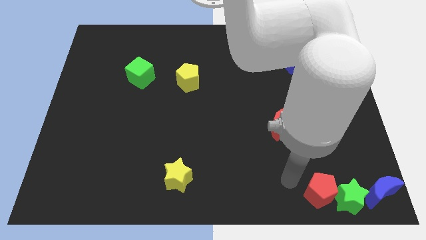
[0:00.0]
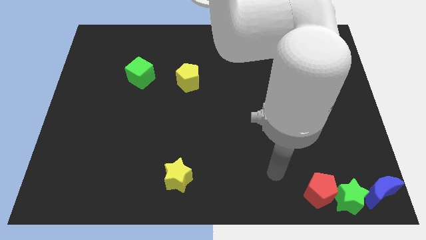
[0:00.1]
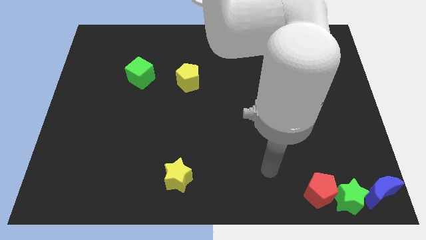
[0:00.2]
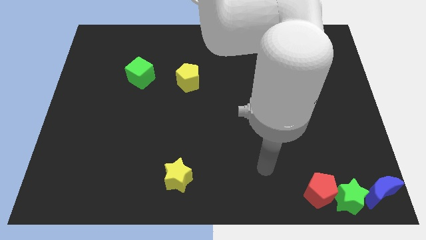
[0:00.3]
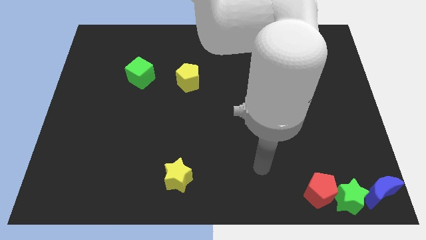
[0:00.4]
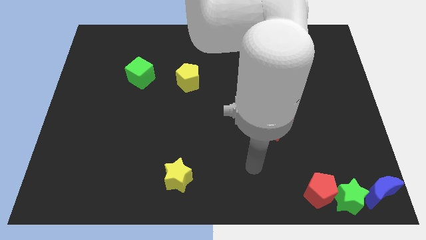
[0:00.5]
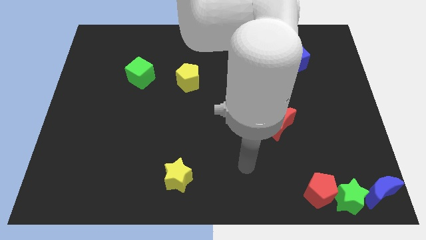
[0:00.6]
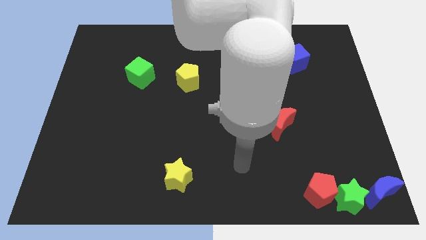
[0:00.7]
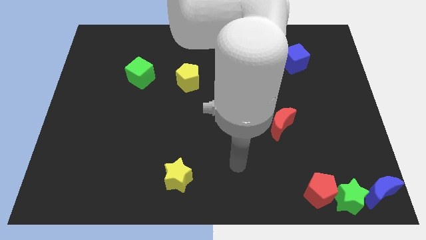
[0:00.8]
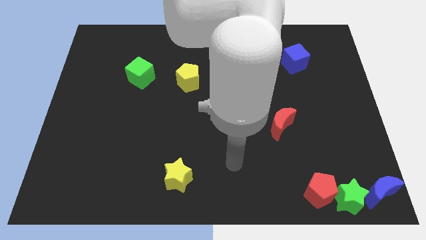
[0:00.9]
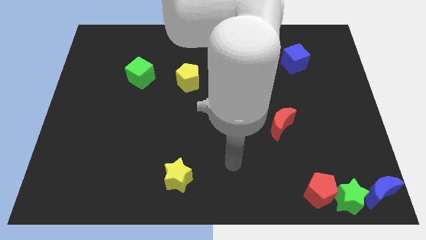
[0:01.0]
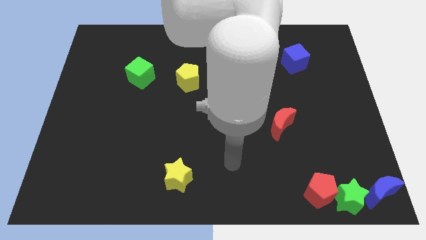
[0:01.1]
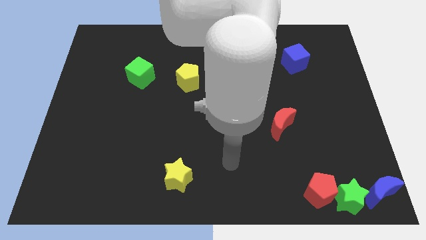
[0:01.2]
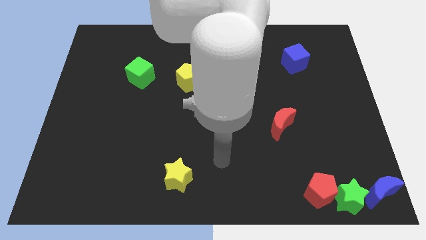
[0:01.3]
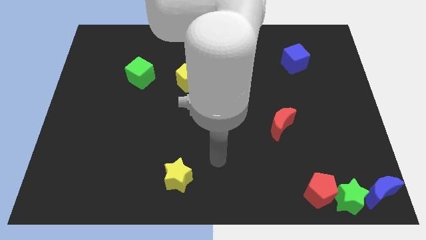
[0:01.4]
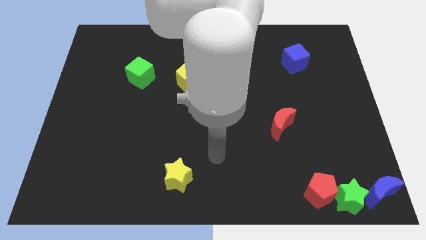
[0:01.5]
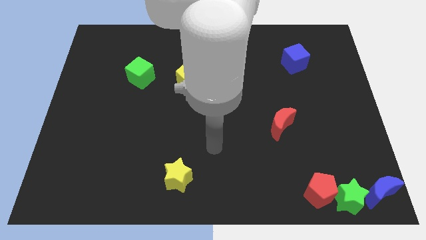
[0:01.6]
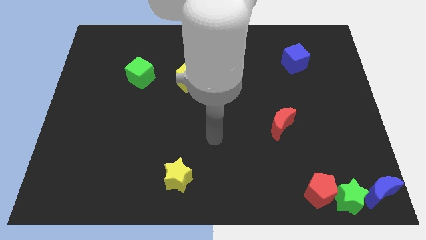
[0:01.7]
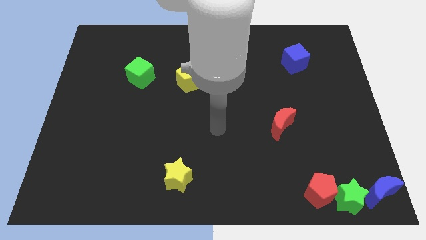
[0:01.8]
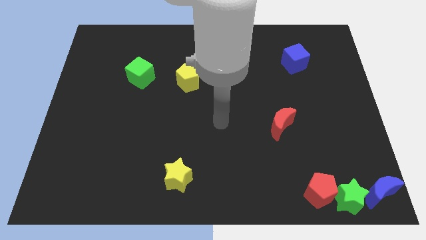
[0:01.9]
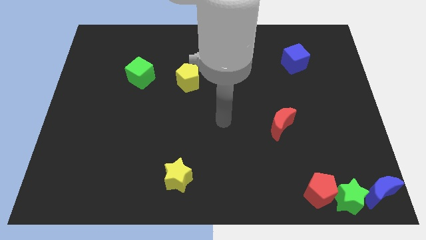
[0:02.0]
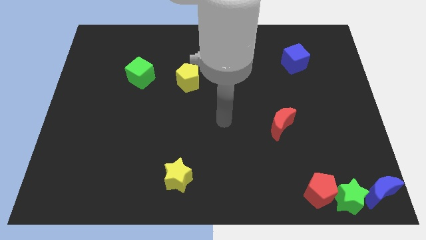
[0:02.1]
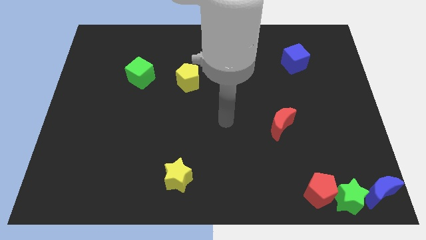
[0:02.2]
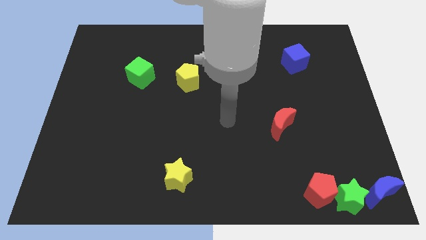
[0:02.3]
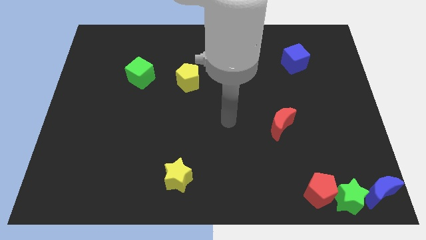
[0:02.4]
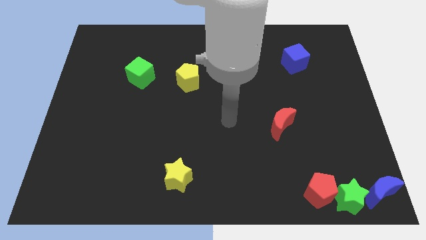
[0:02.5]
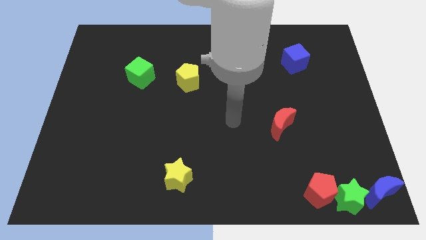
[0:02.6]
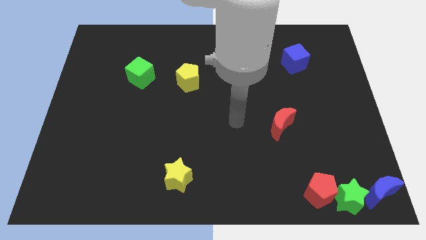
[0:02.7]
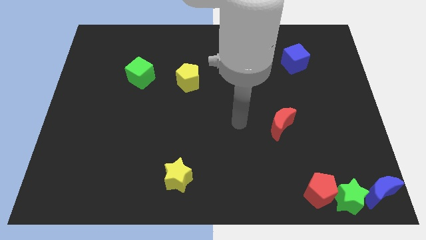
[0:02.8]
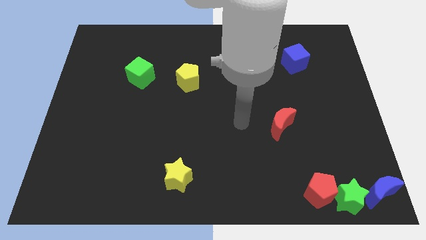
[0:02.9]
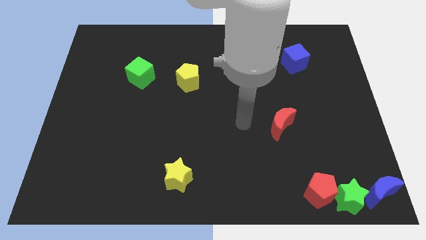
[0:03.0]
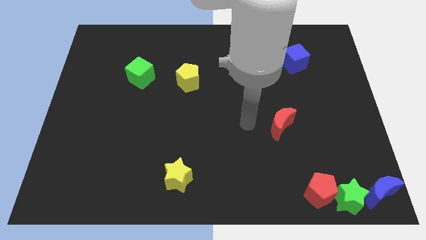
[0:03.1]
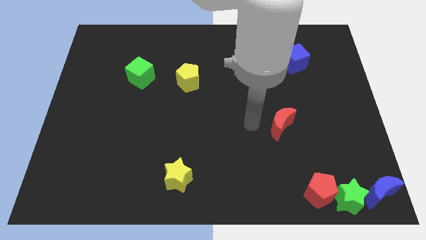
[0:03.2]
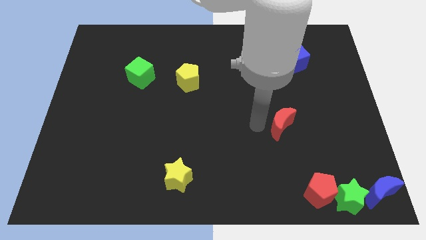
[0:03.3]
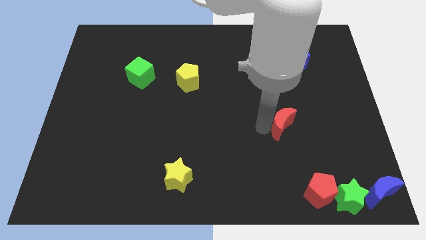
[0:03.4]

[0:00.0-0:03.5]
point your arm at the left side of the red crescent

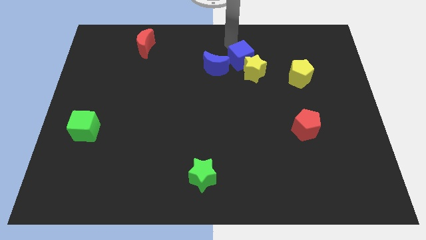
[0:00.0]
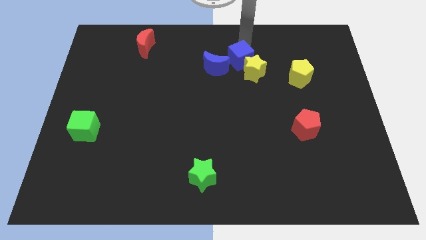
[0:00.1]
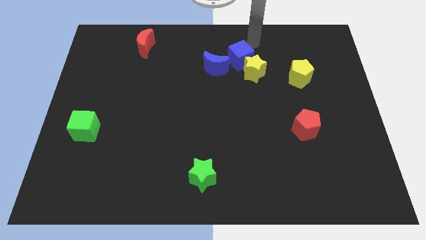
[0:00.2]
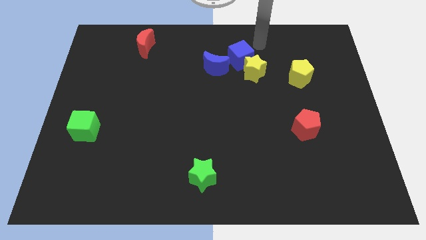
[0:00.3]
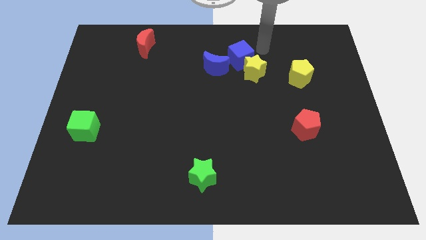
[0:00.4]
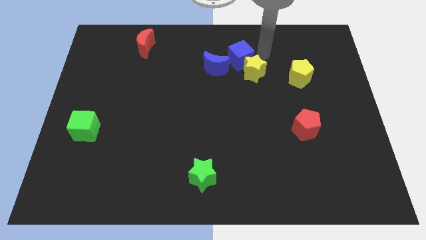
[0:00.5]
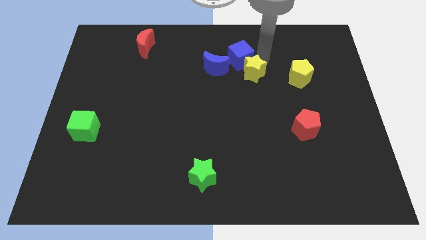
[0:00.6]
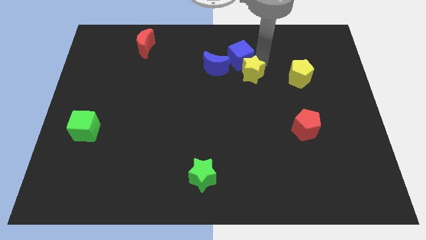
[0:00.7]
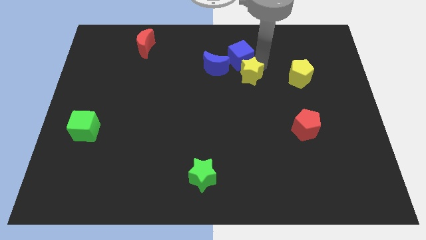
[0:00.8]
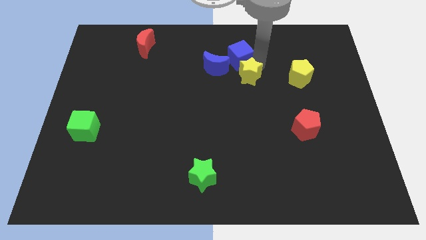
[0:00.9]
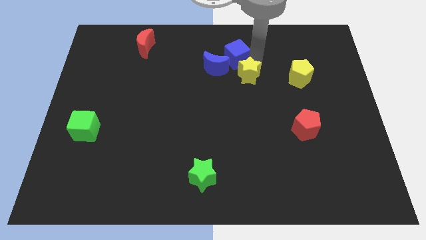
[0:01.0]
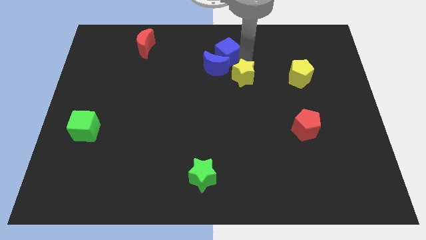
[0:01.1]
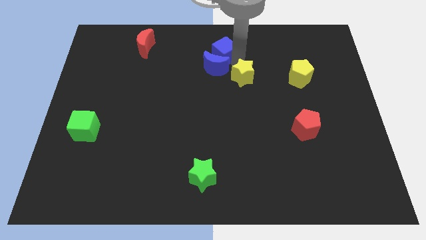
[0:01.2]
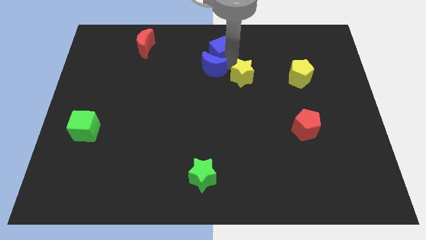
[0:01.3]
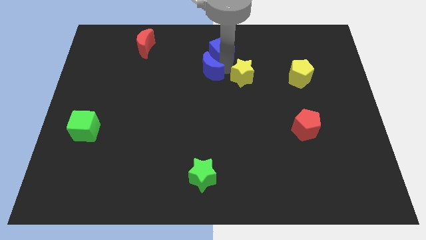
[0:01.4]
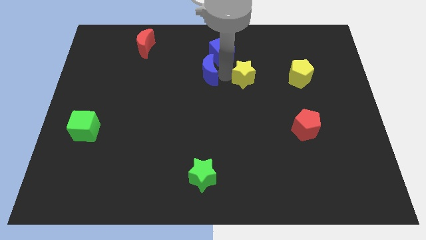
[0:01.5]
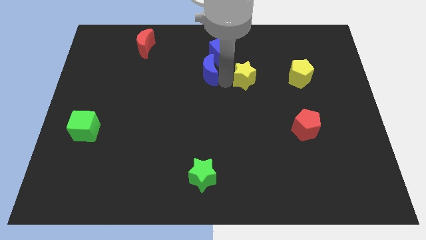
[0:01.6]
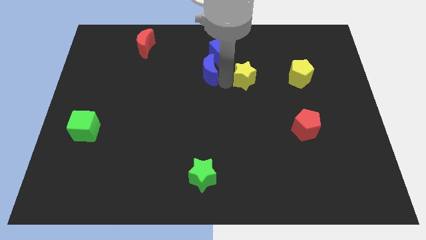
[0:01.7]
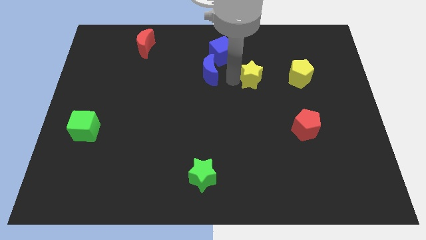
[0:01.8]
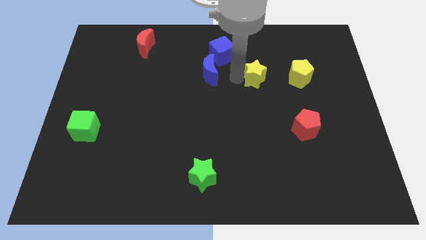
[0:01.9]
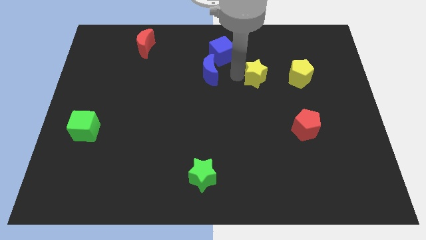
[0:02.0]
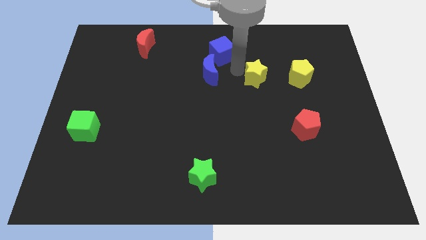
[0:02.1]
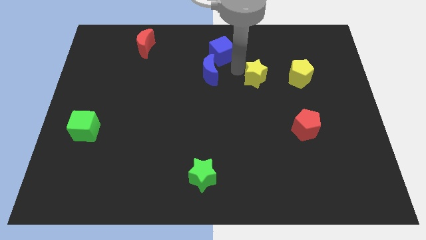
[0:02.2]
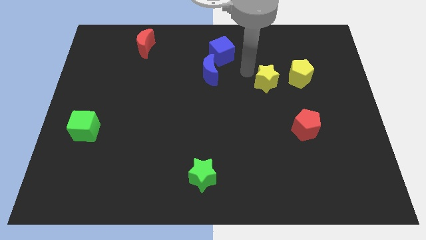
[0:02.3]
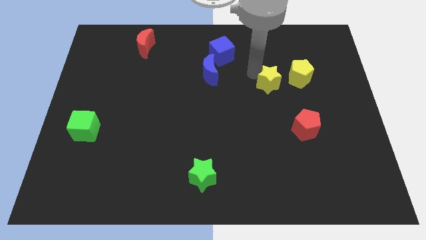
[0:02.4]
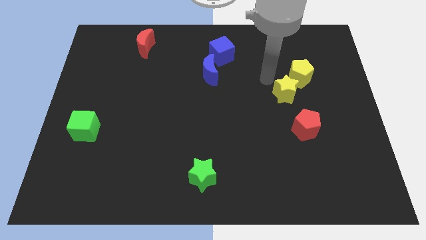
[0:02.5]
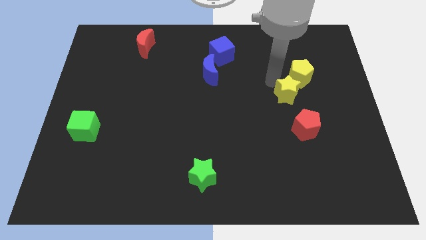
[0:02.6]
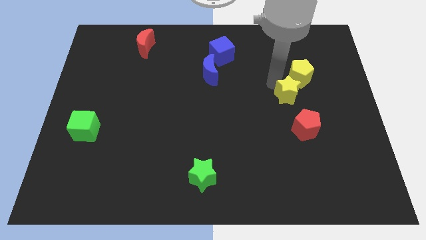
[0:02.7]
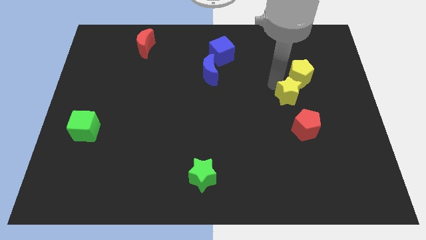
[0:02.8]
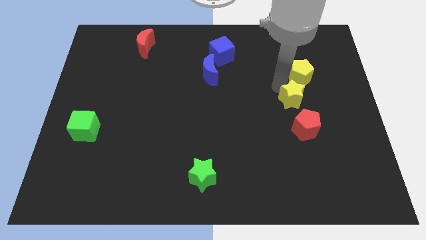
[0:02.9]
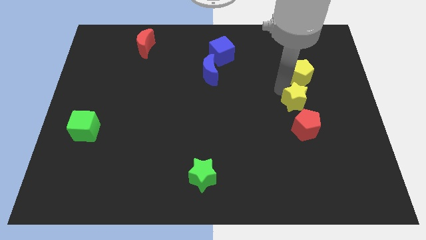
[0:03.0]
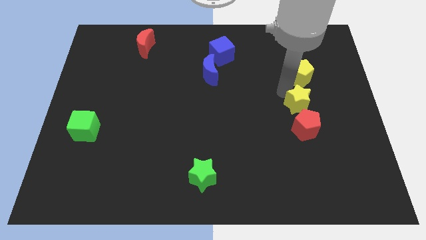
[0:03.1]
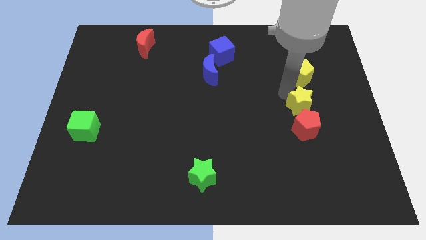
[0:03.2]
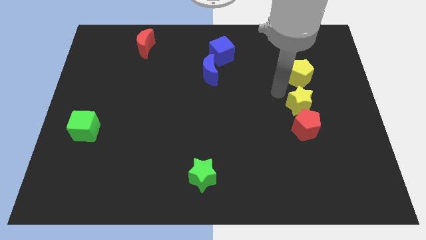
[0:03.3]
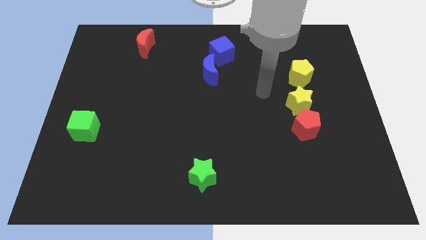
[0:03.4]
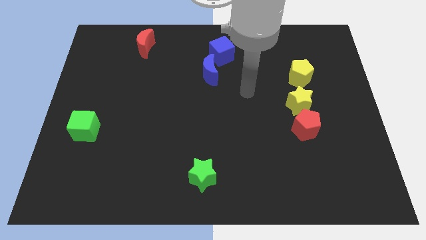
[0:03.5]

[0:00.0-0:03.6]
put yellow star in between yellow pentagon and red pentagon

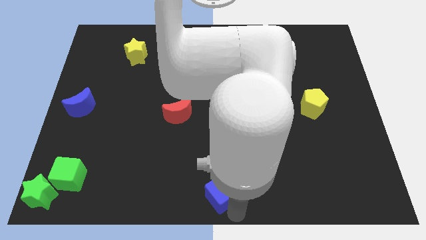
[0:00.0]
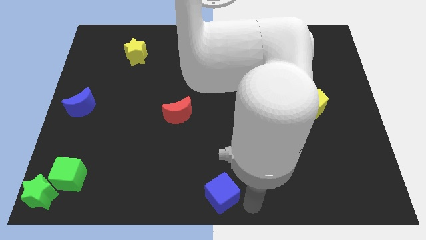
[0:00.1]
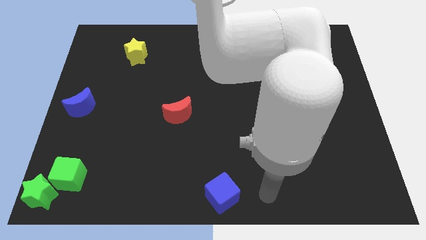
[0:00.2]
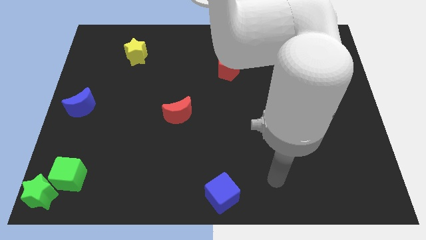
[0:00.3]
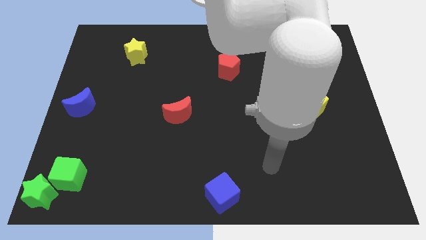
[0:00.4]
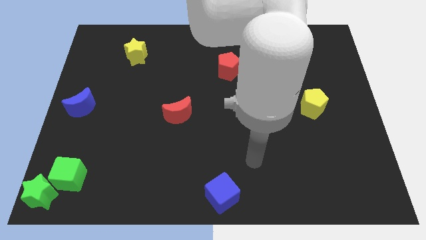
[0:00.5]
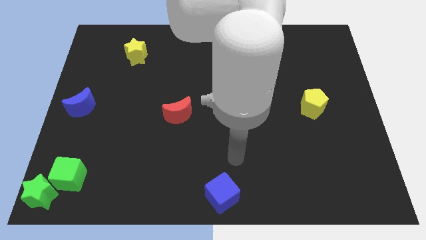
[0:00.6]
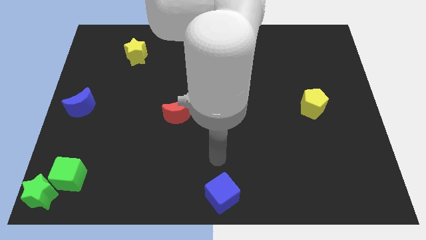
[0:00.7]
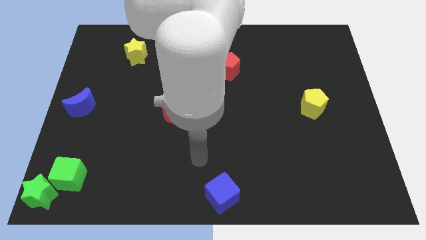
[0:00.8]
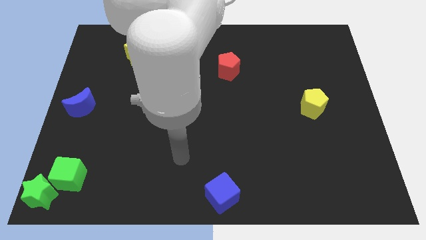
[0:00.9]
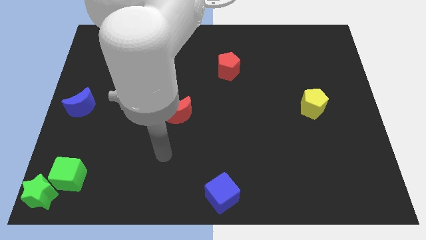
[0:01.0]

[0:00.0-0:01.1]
take your arm away from the blue cube

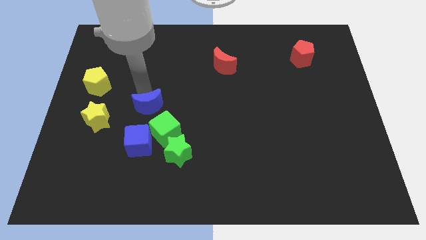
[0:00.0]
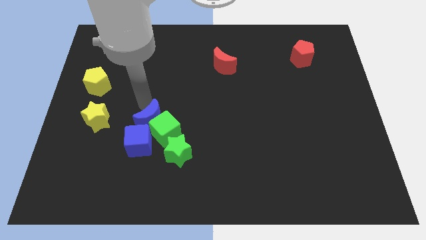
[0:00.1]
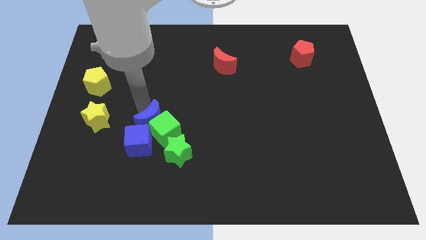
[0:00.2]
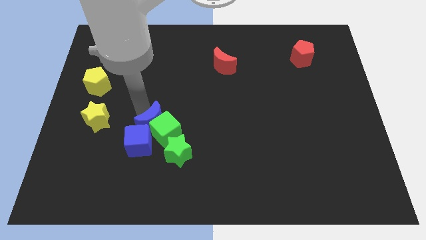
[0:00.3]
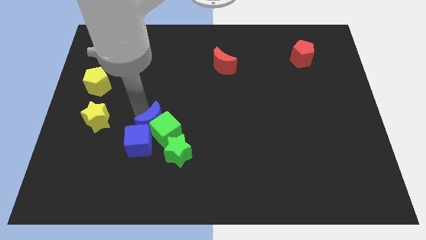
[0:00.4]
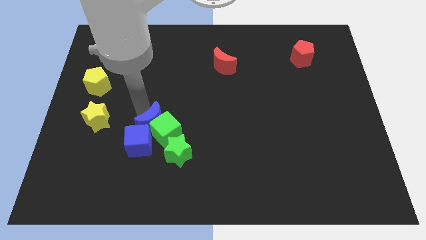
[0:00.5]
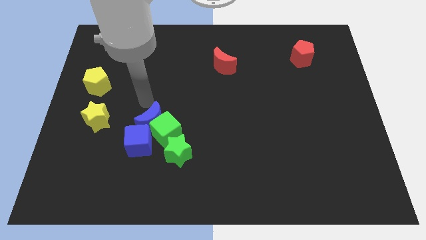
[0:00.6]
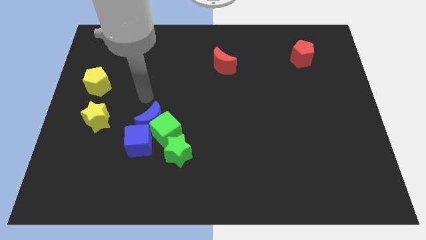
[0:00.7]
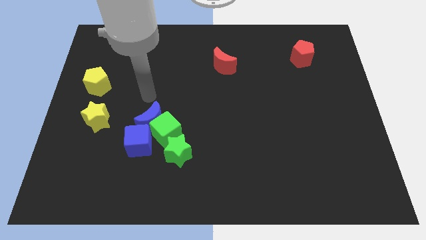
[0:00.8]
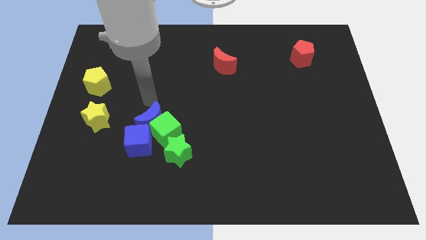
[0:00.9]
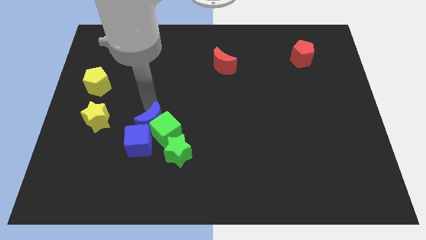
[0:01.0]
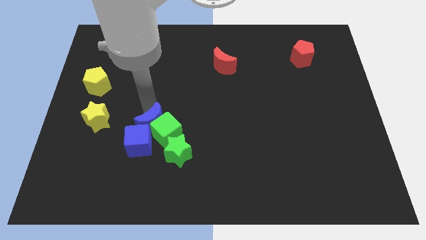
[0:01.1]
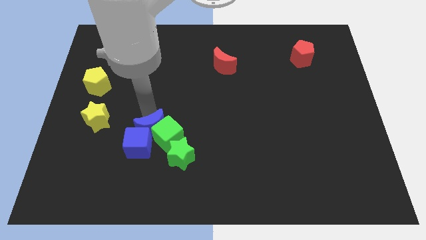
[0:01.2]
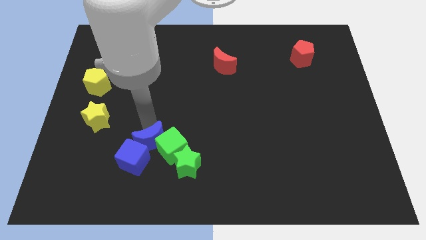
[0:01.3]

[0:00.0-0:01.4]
move blue moon above the green and blue cubes
